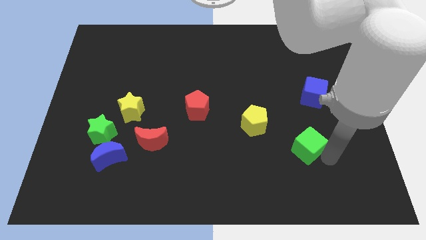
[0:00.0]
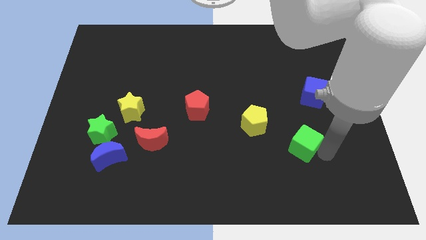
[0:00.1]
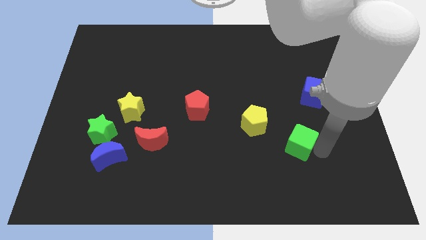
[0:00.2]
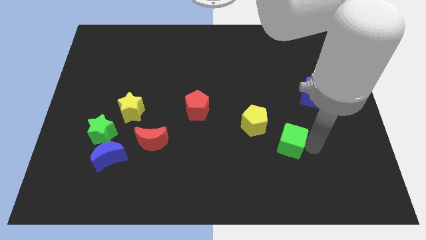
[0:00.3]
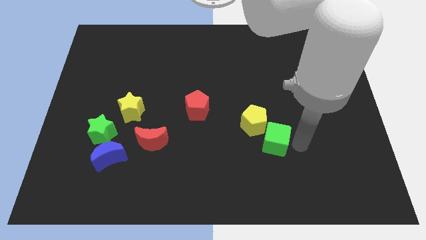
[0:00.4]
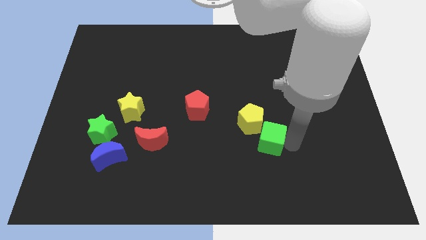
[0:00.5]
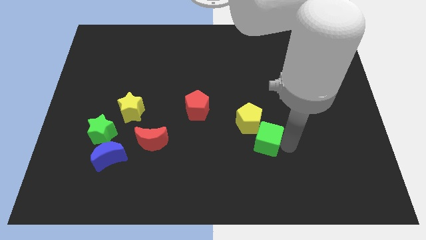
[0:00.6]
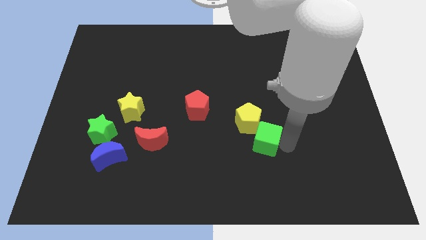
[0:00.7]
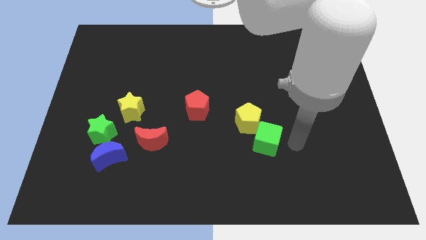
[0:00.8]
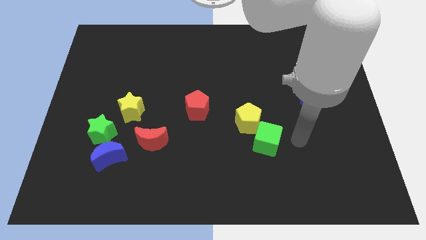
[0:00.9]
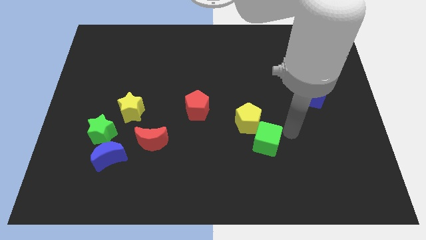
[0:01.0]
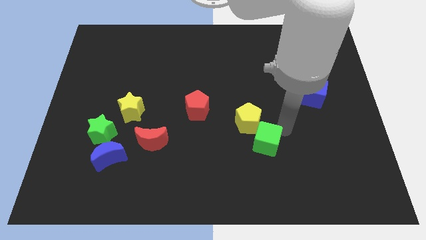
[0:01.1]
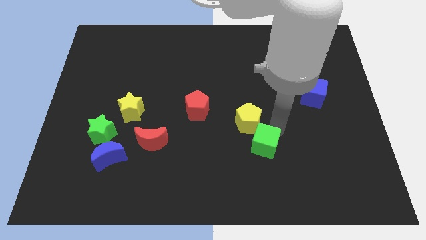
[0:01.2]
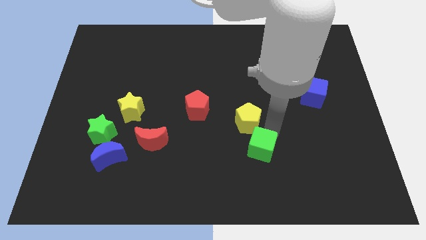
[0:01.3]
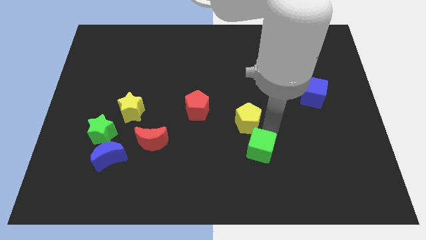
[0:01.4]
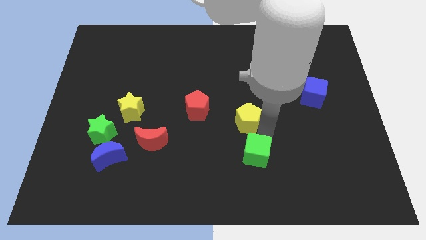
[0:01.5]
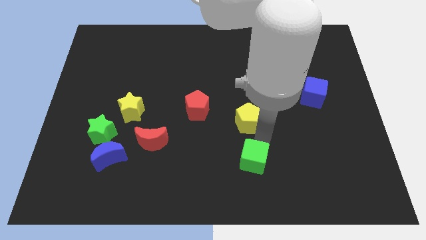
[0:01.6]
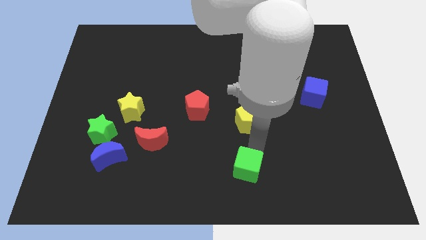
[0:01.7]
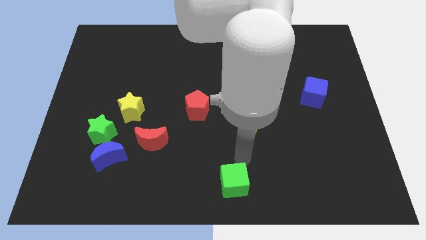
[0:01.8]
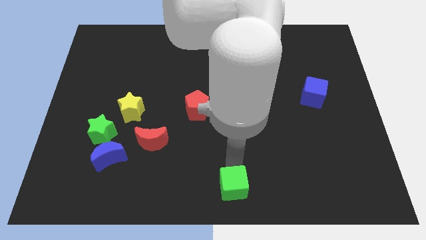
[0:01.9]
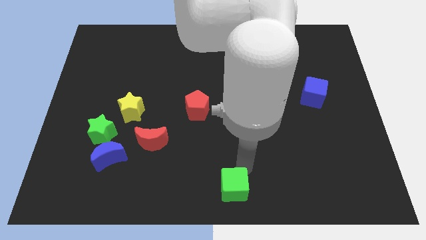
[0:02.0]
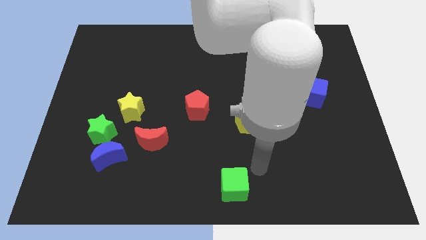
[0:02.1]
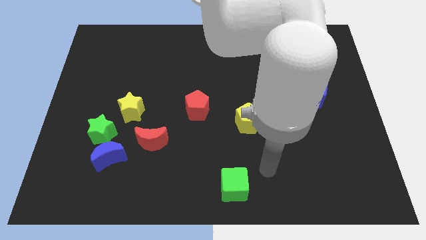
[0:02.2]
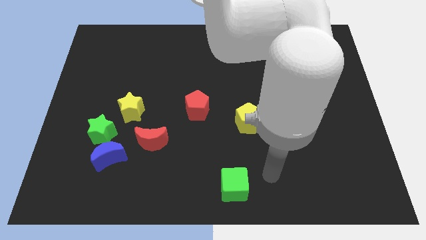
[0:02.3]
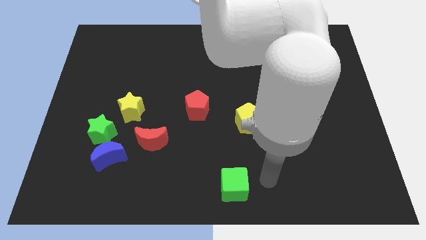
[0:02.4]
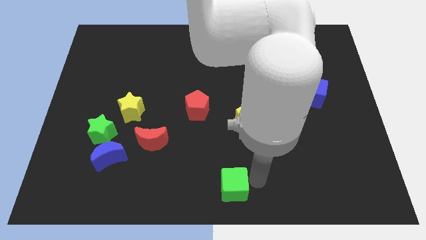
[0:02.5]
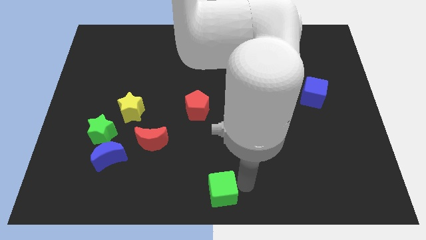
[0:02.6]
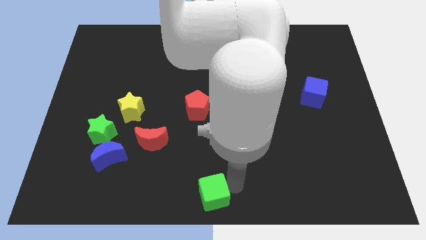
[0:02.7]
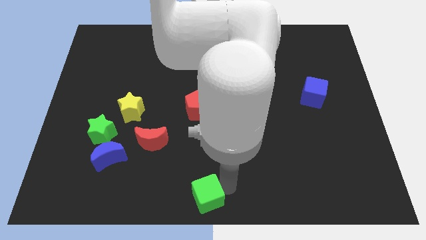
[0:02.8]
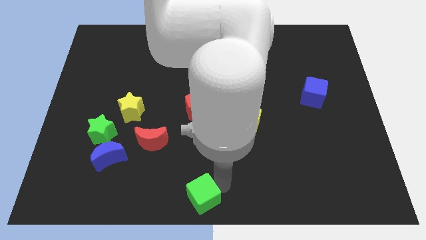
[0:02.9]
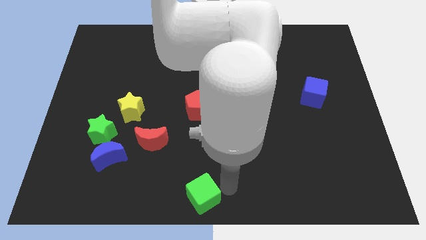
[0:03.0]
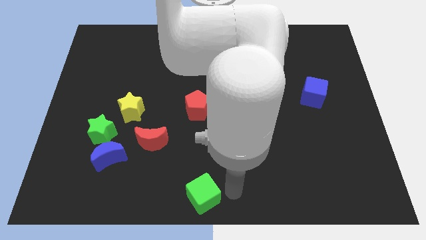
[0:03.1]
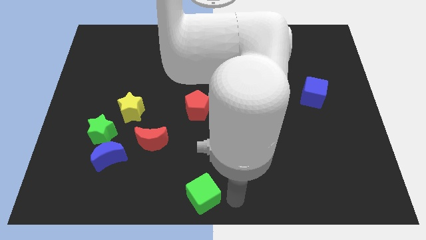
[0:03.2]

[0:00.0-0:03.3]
move the green cube at the bottom center of the board

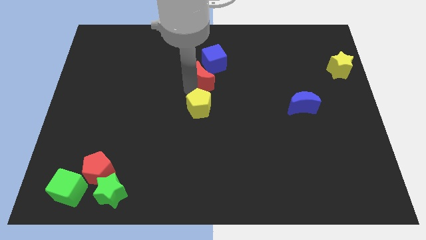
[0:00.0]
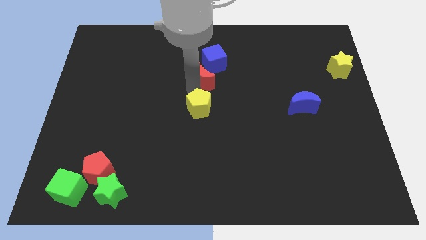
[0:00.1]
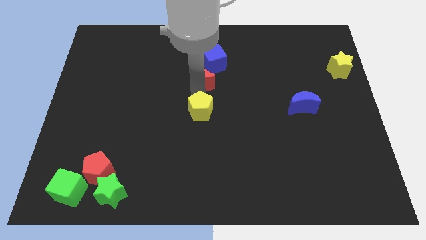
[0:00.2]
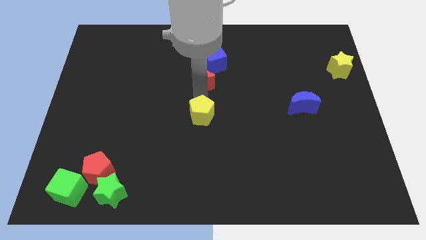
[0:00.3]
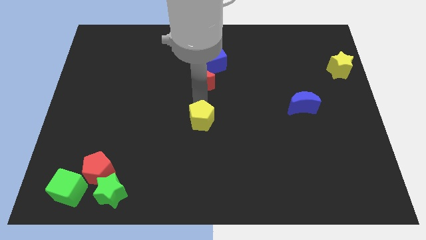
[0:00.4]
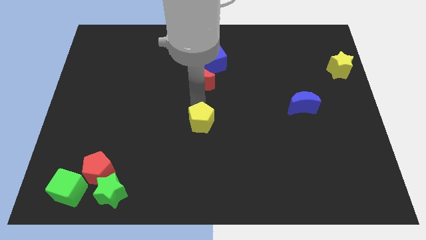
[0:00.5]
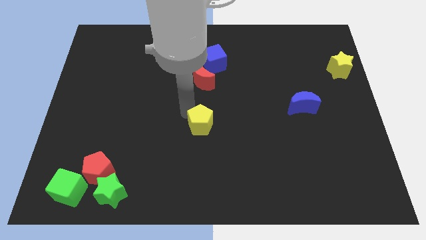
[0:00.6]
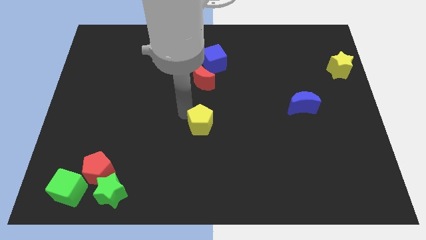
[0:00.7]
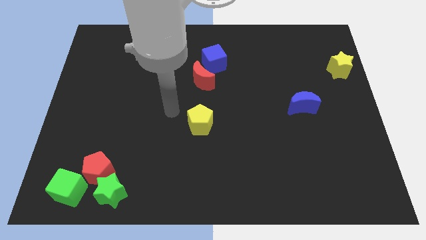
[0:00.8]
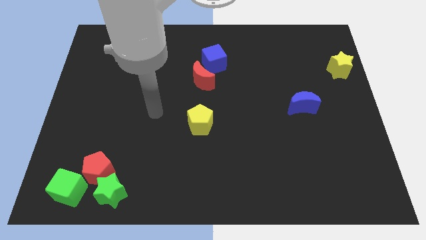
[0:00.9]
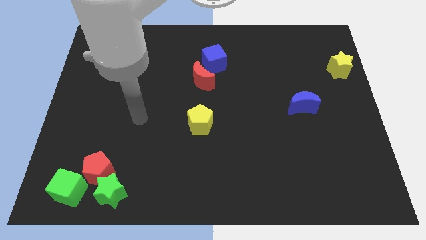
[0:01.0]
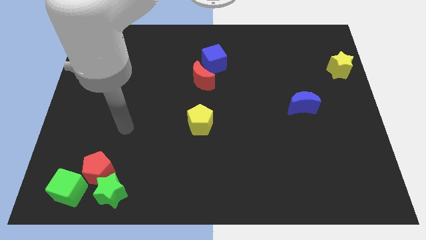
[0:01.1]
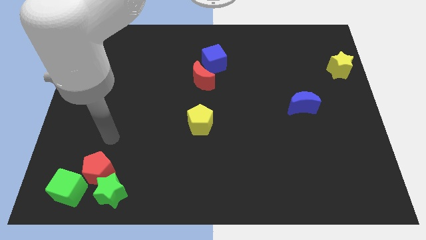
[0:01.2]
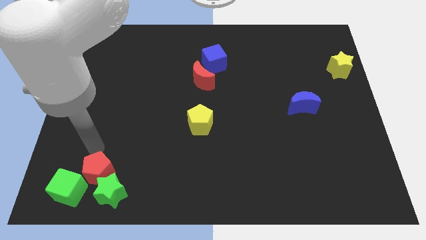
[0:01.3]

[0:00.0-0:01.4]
push the yellow pentagon to the center of the board

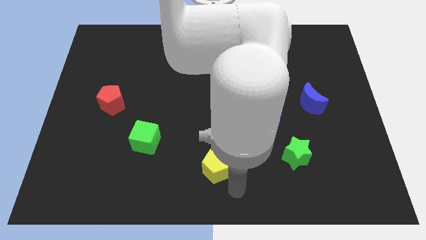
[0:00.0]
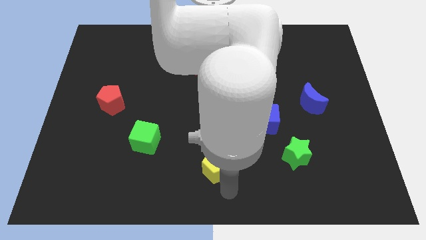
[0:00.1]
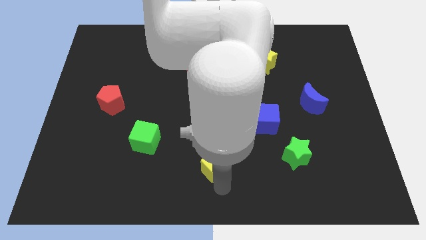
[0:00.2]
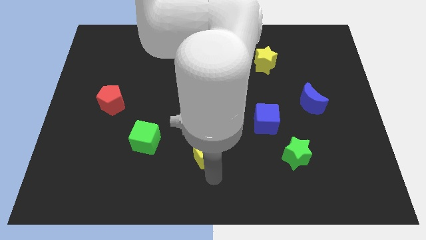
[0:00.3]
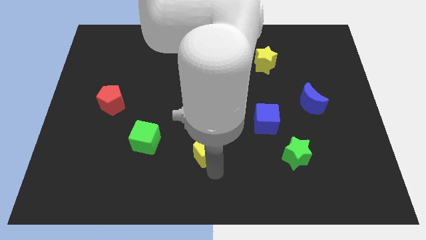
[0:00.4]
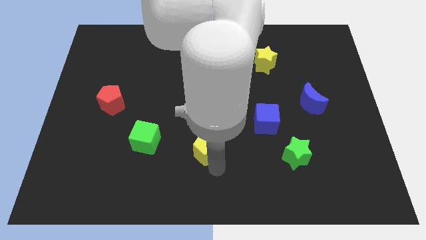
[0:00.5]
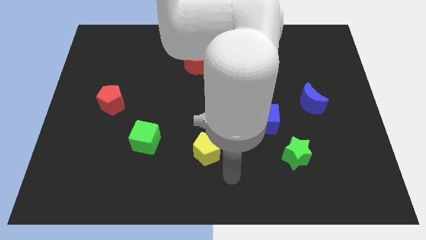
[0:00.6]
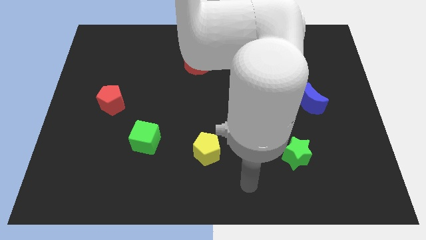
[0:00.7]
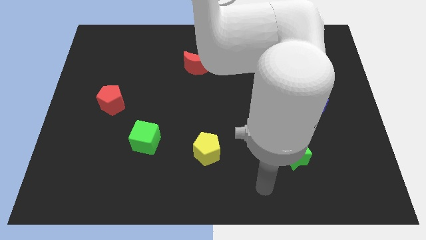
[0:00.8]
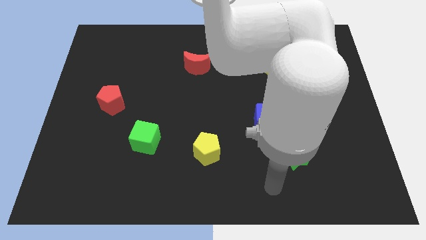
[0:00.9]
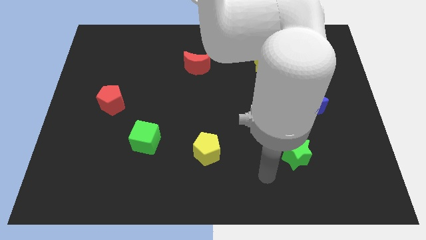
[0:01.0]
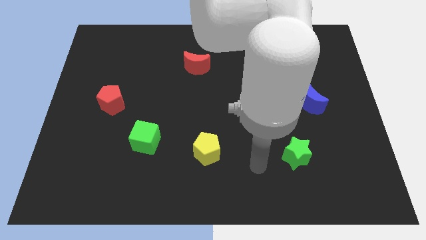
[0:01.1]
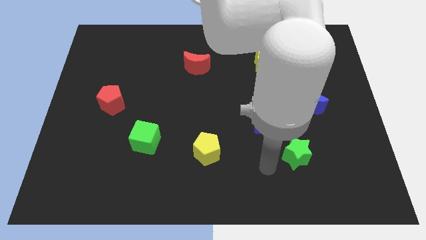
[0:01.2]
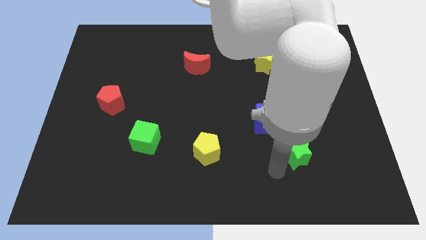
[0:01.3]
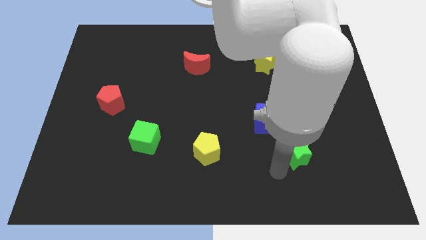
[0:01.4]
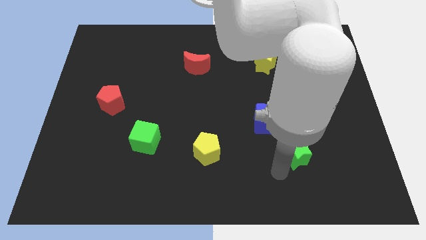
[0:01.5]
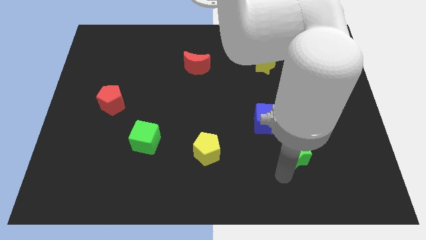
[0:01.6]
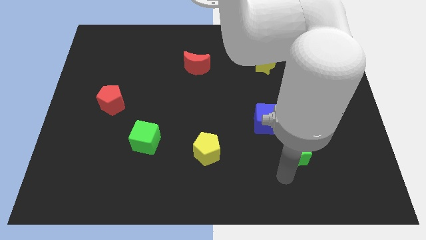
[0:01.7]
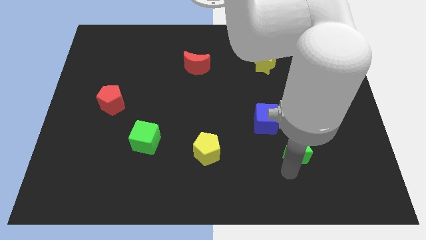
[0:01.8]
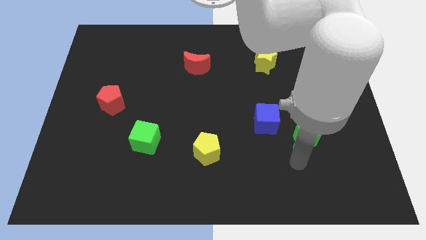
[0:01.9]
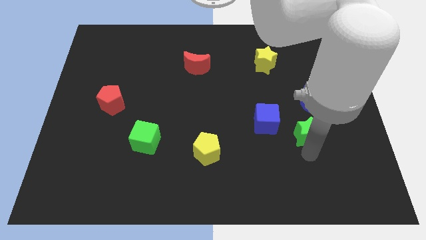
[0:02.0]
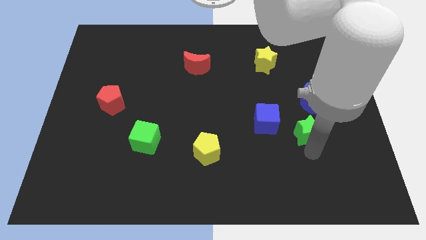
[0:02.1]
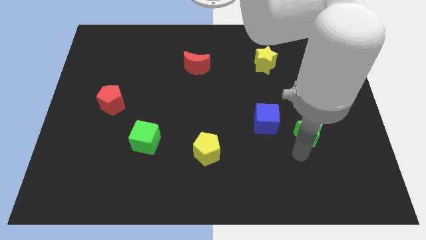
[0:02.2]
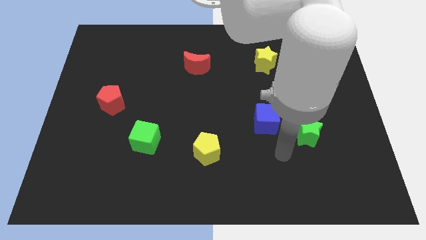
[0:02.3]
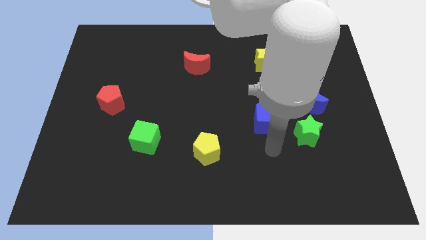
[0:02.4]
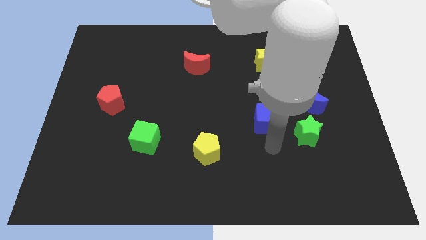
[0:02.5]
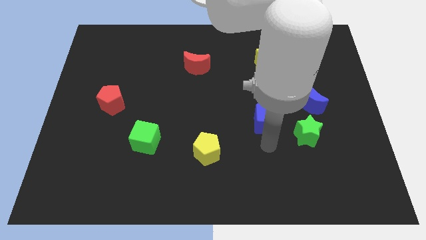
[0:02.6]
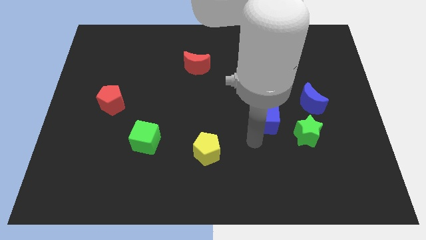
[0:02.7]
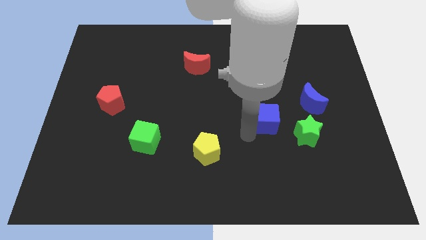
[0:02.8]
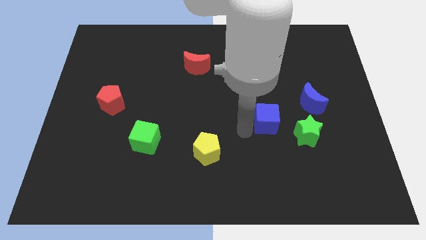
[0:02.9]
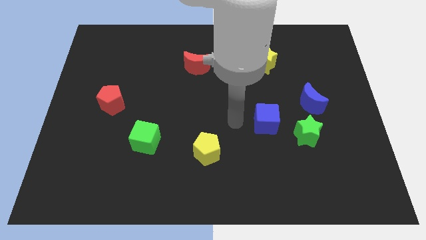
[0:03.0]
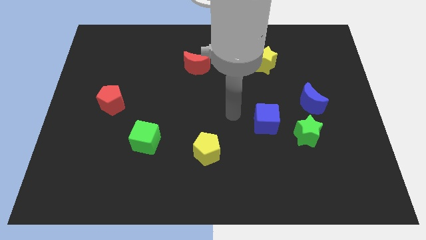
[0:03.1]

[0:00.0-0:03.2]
place the yellow pentagon and green star diagonally

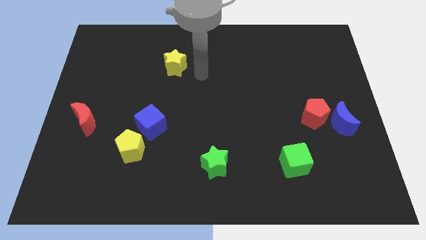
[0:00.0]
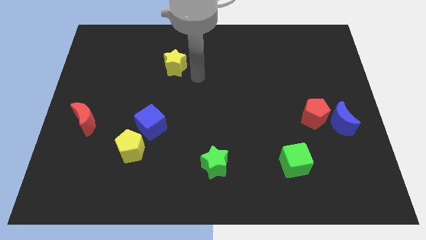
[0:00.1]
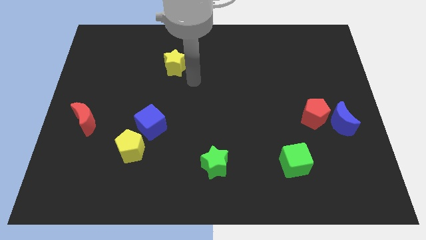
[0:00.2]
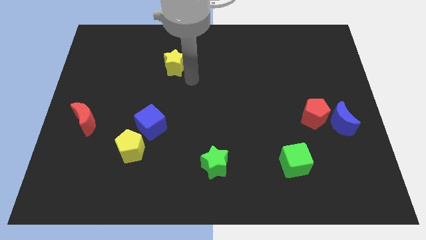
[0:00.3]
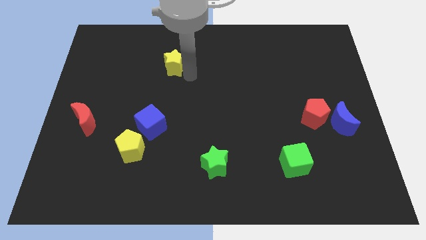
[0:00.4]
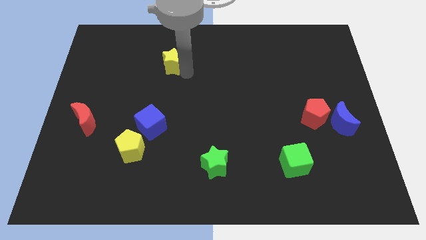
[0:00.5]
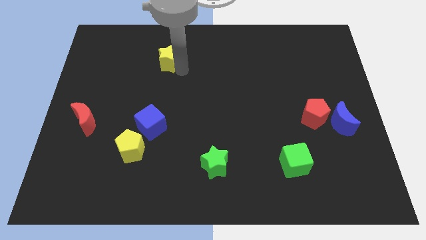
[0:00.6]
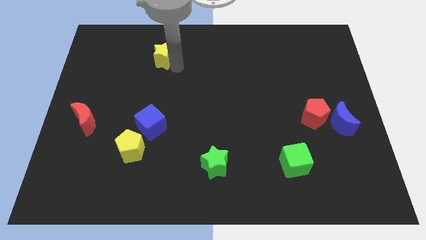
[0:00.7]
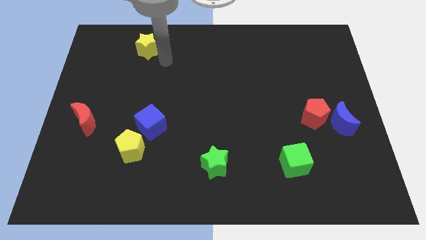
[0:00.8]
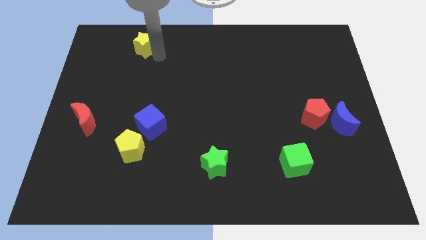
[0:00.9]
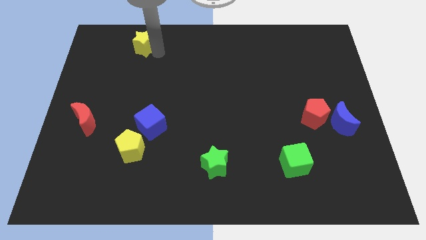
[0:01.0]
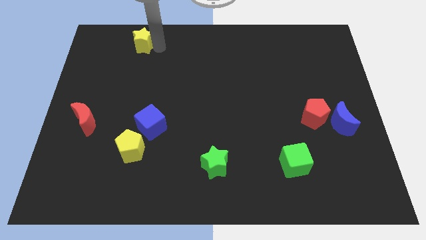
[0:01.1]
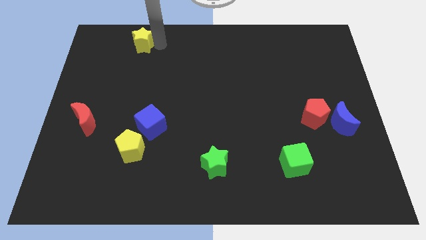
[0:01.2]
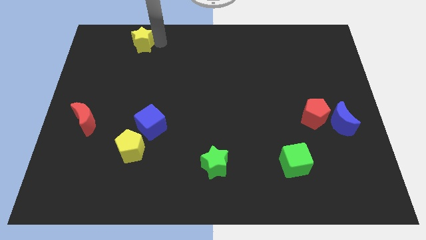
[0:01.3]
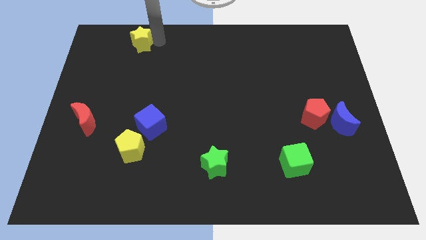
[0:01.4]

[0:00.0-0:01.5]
put the yellow star vertically at the top side of the yellow pentagon
